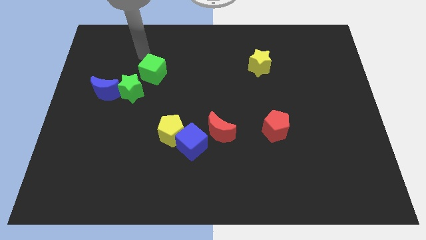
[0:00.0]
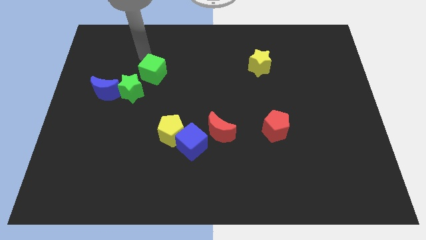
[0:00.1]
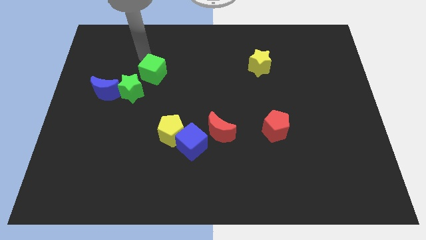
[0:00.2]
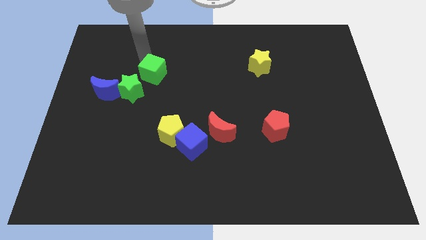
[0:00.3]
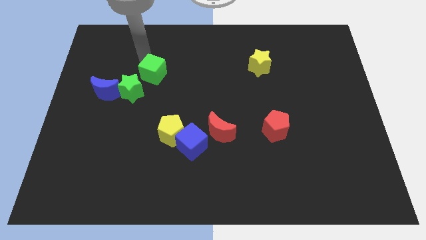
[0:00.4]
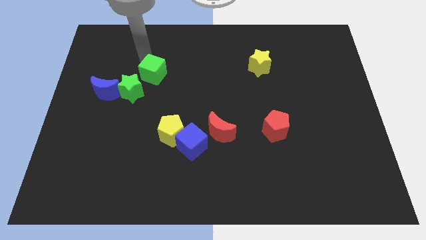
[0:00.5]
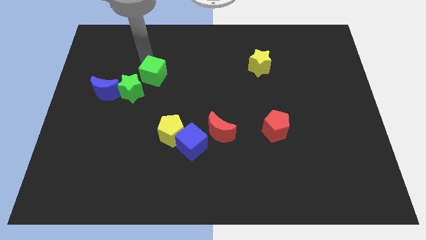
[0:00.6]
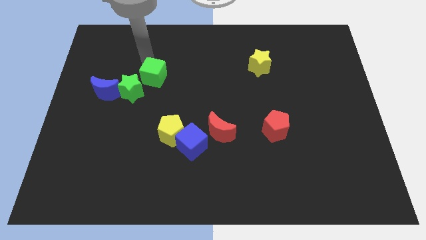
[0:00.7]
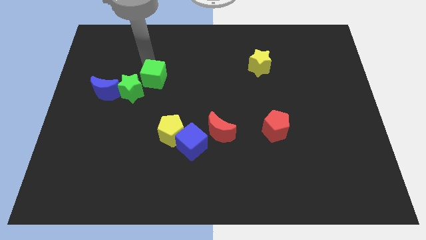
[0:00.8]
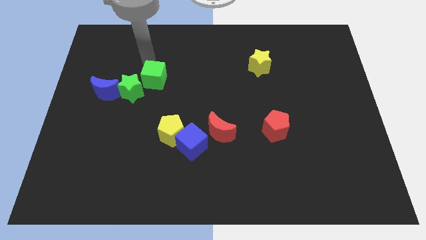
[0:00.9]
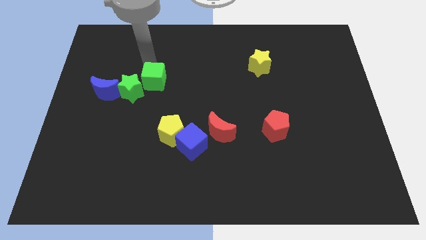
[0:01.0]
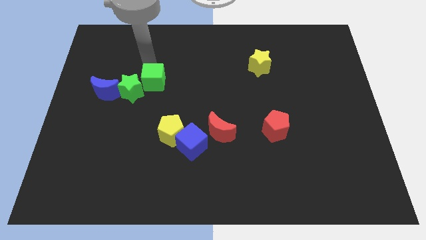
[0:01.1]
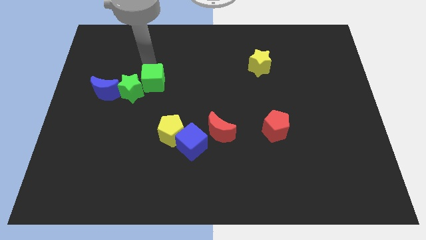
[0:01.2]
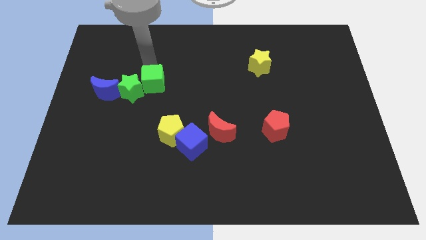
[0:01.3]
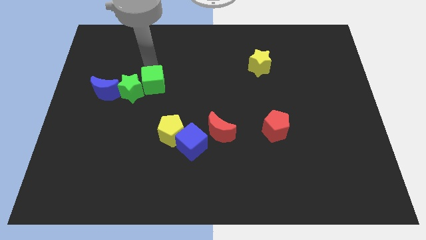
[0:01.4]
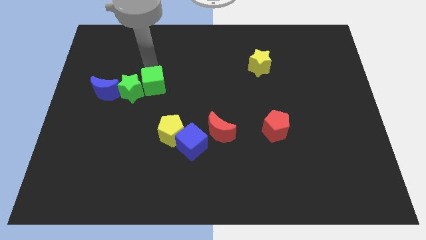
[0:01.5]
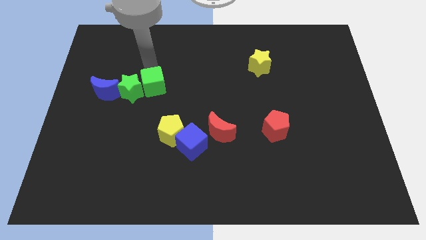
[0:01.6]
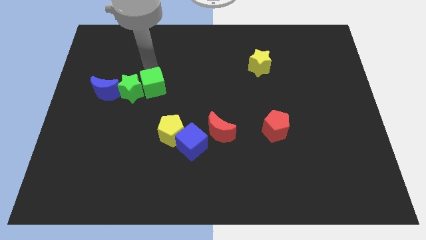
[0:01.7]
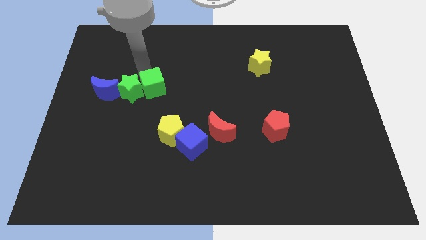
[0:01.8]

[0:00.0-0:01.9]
push the green cube to the right of the green star

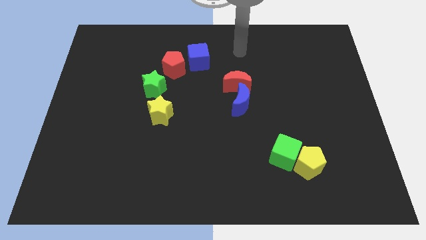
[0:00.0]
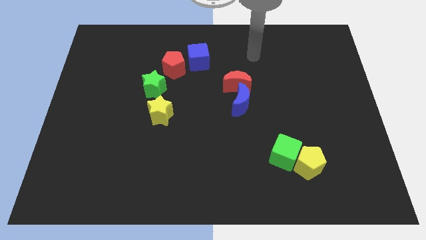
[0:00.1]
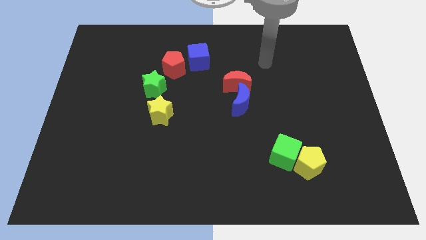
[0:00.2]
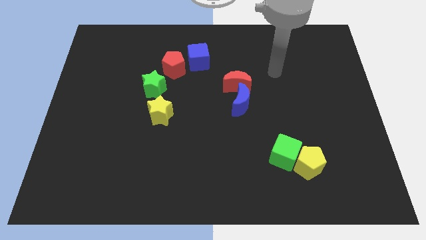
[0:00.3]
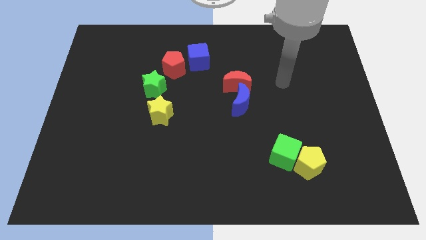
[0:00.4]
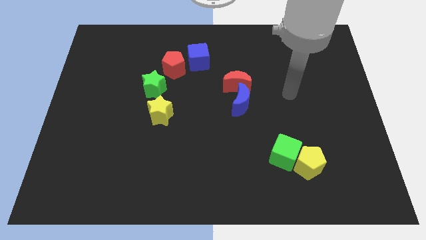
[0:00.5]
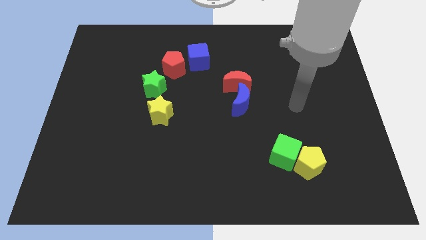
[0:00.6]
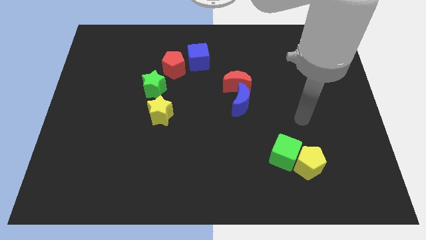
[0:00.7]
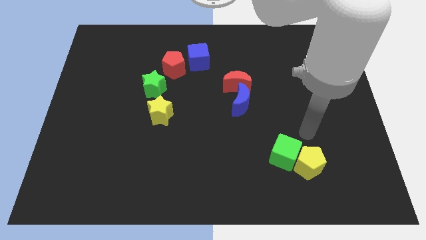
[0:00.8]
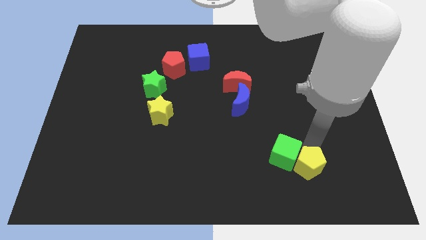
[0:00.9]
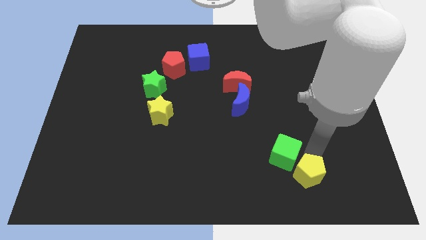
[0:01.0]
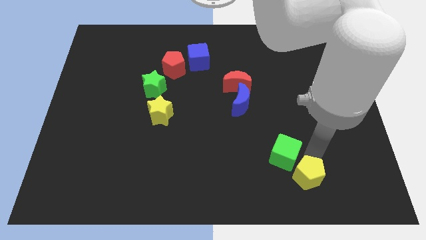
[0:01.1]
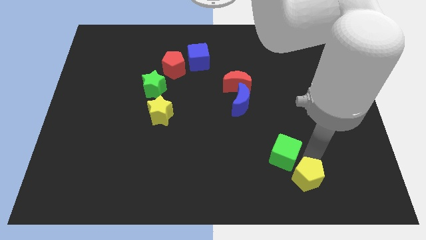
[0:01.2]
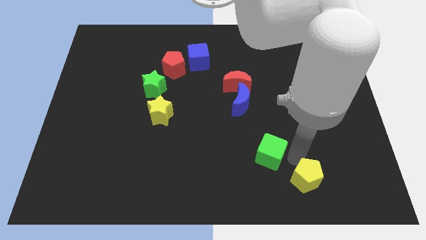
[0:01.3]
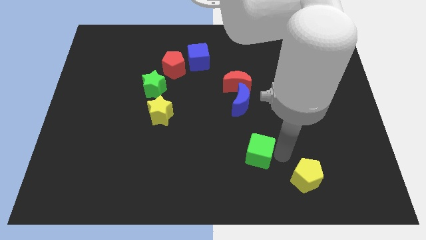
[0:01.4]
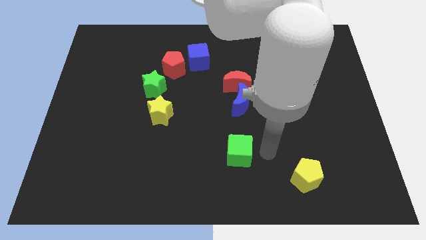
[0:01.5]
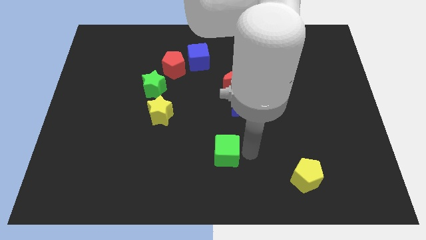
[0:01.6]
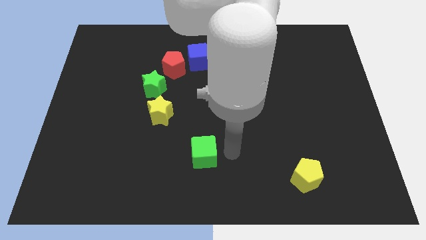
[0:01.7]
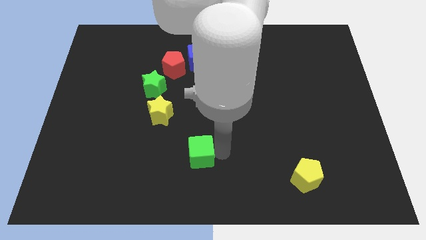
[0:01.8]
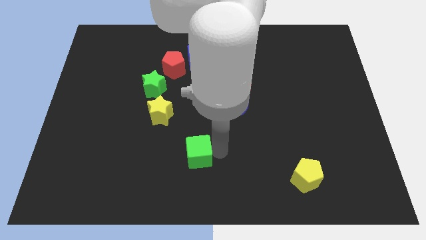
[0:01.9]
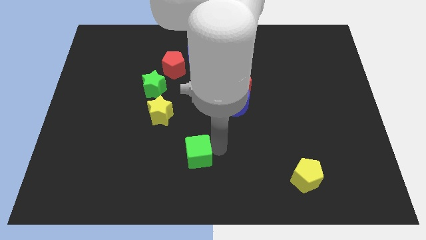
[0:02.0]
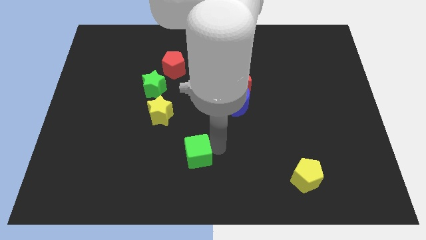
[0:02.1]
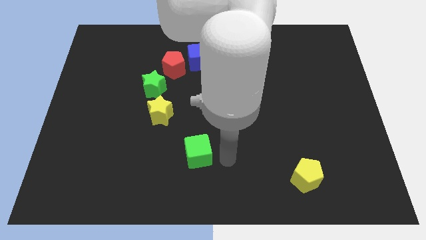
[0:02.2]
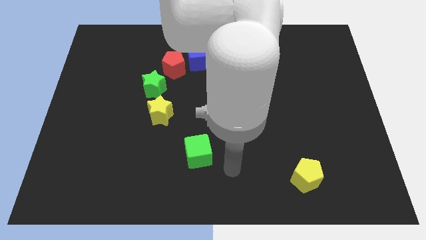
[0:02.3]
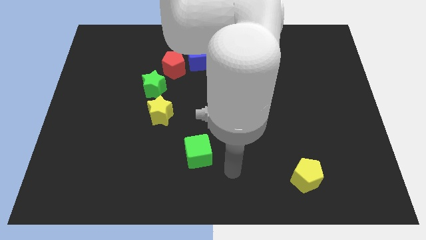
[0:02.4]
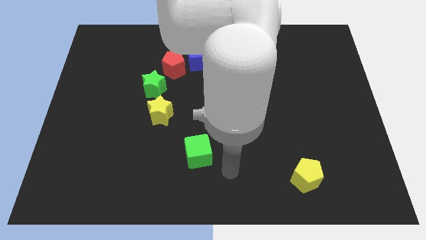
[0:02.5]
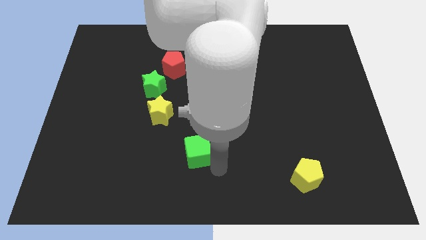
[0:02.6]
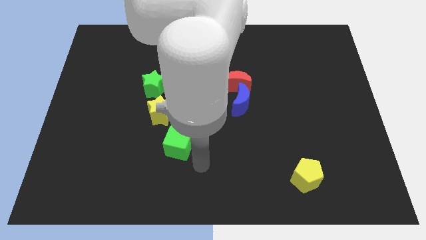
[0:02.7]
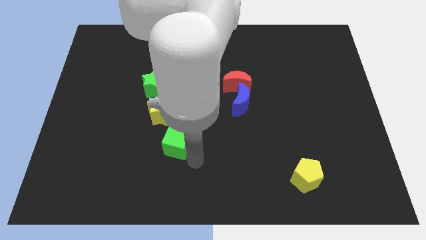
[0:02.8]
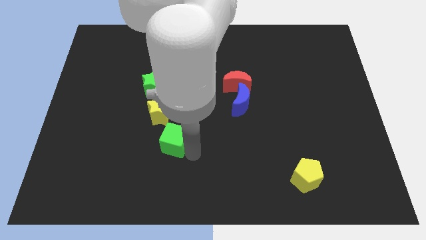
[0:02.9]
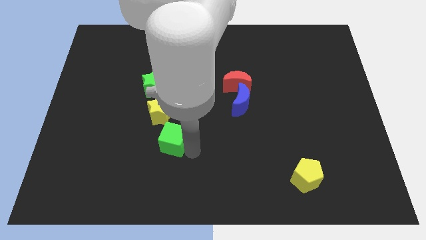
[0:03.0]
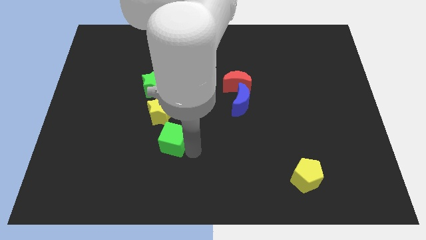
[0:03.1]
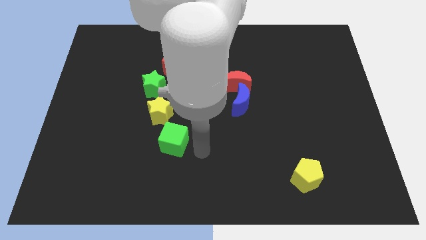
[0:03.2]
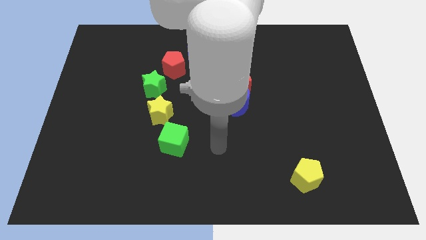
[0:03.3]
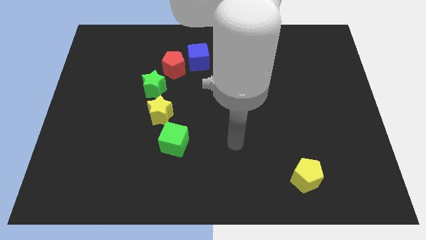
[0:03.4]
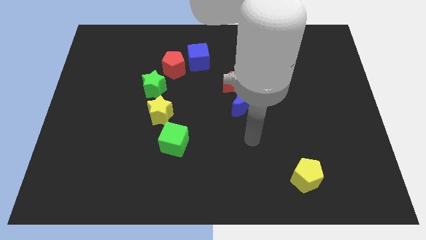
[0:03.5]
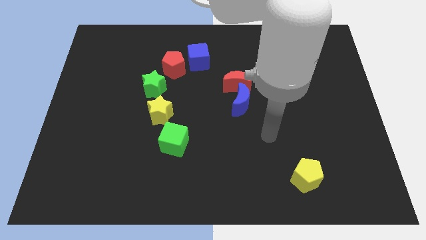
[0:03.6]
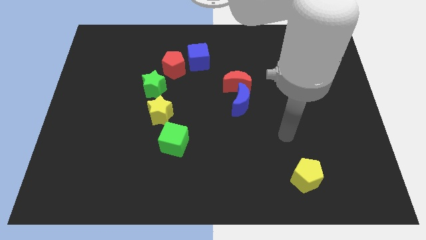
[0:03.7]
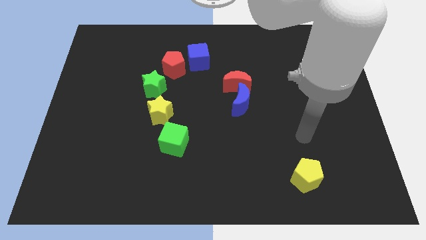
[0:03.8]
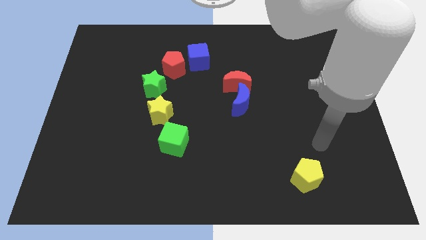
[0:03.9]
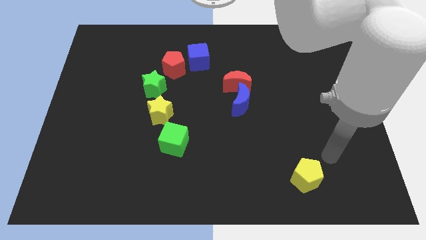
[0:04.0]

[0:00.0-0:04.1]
move the green cube at the right side bottom of the yellow star

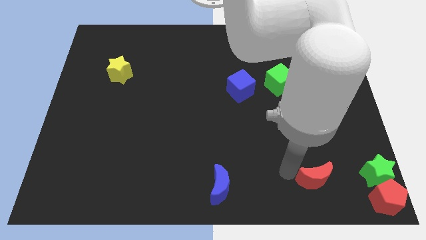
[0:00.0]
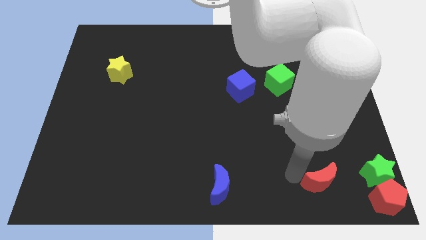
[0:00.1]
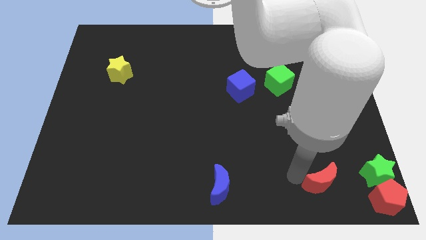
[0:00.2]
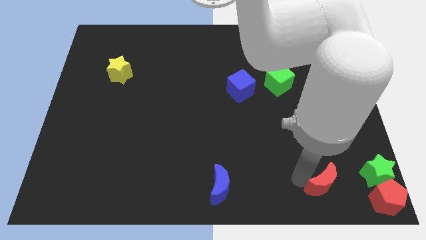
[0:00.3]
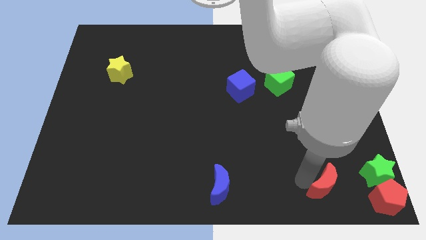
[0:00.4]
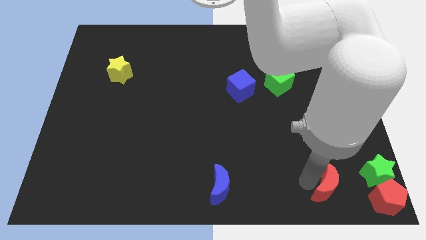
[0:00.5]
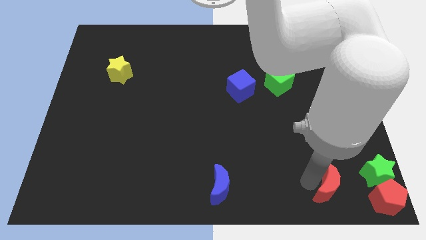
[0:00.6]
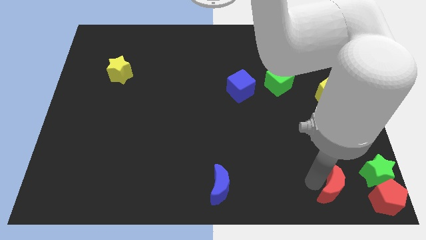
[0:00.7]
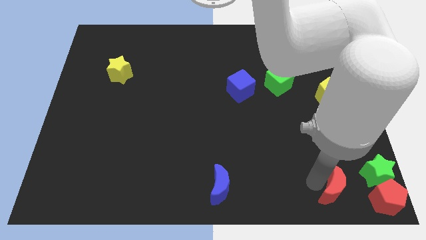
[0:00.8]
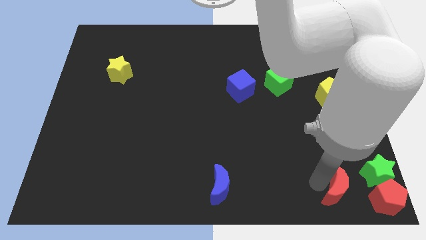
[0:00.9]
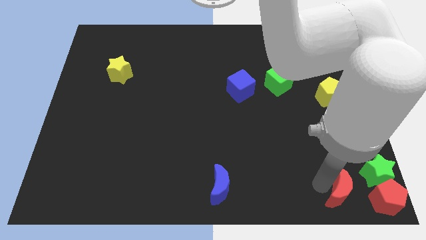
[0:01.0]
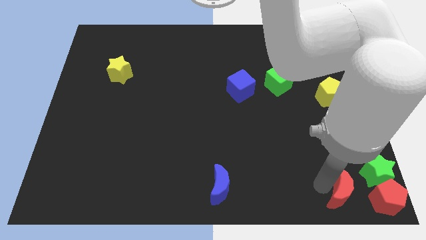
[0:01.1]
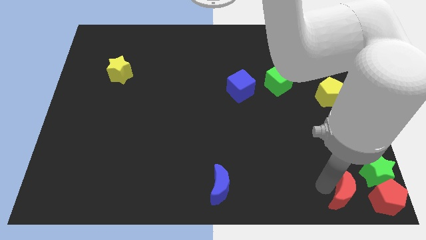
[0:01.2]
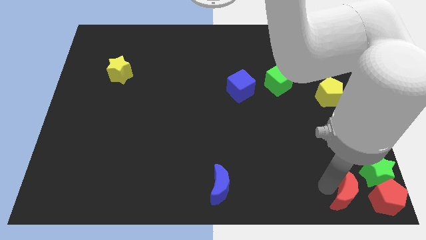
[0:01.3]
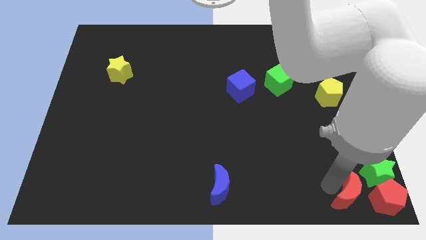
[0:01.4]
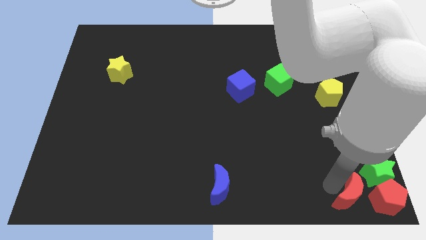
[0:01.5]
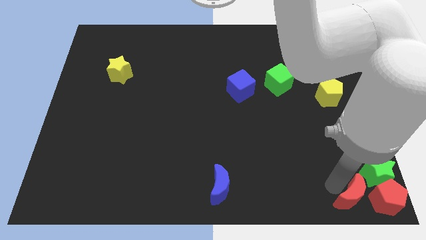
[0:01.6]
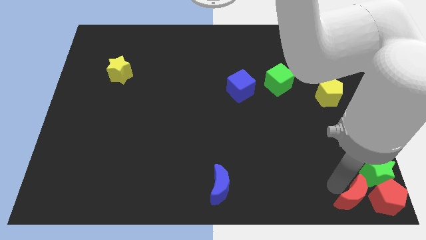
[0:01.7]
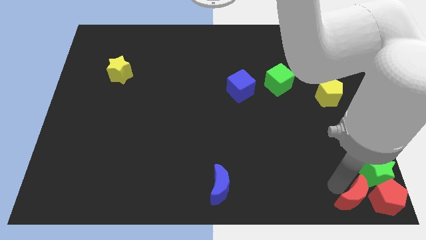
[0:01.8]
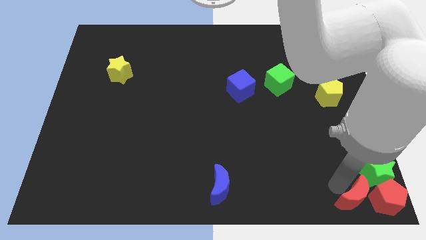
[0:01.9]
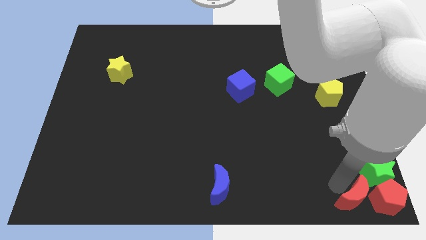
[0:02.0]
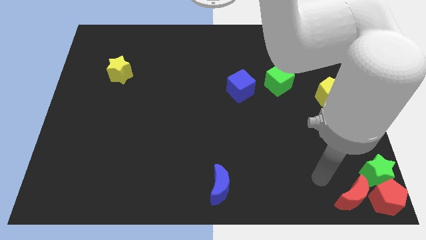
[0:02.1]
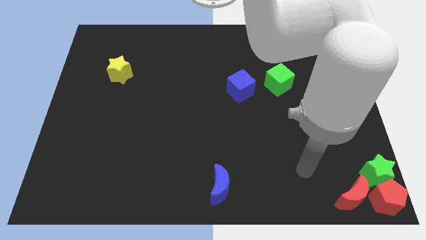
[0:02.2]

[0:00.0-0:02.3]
push the red crescent to the left of the red pentagon

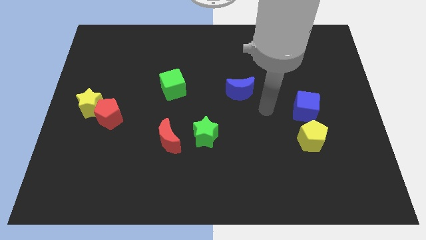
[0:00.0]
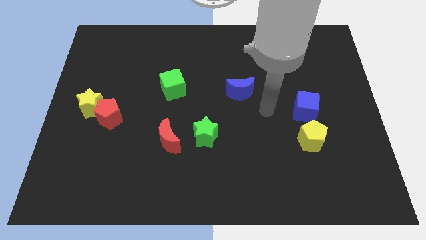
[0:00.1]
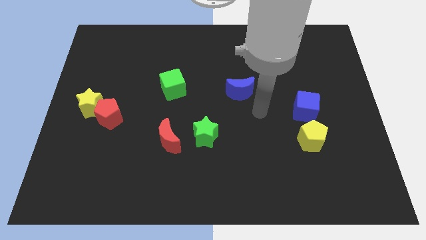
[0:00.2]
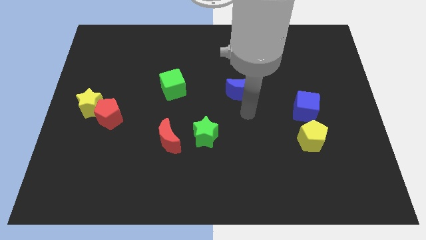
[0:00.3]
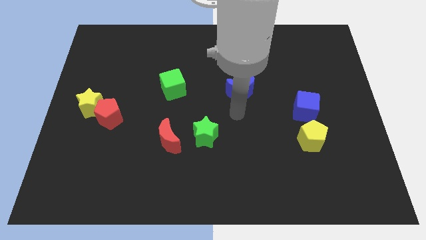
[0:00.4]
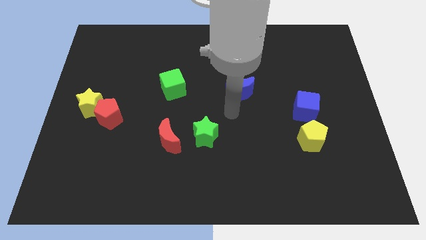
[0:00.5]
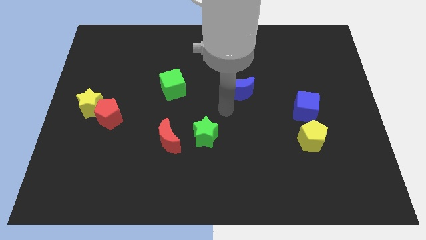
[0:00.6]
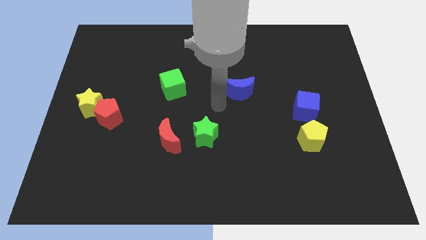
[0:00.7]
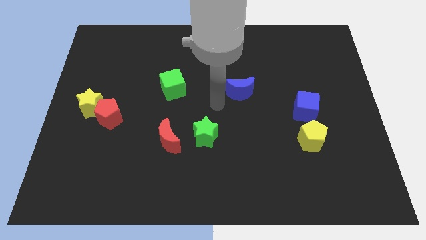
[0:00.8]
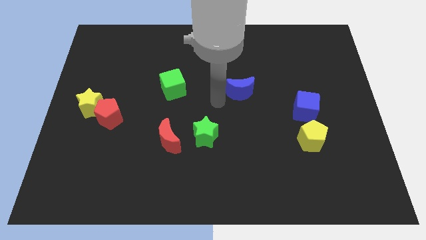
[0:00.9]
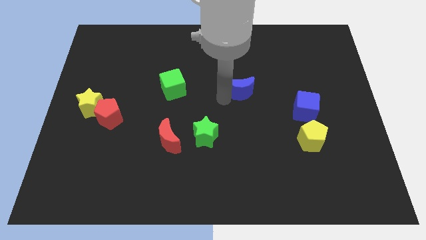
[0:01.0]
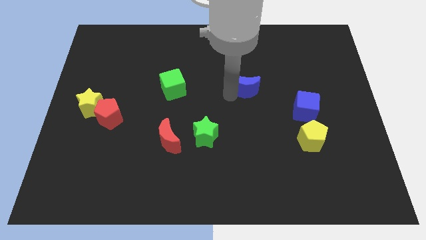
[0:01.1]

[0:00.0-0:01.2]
point your arm close to blue crescent
